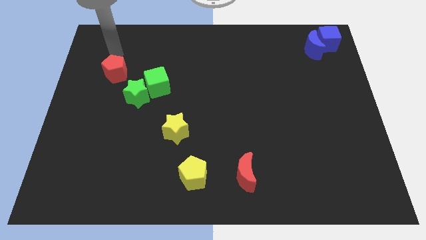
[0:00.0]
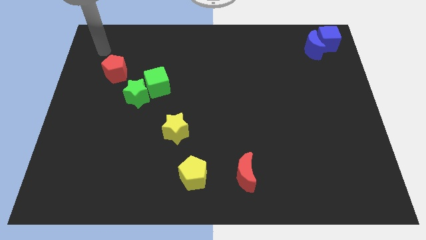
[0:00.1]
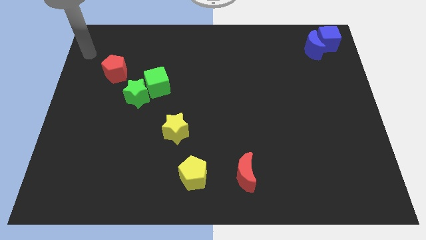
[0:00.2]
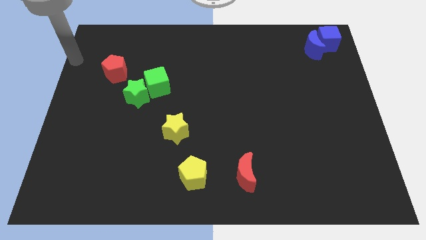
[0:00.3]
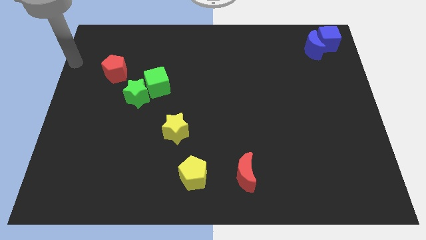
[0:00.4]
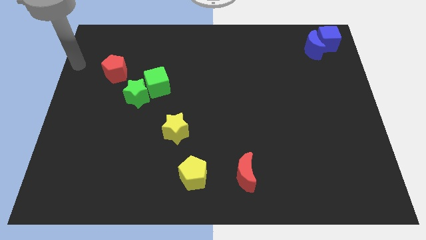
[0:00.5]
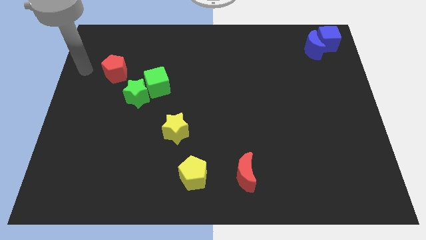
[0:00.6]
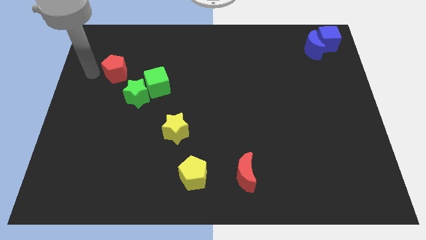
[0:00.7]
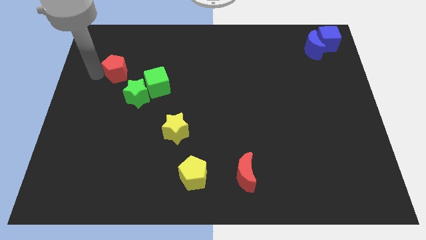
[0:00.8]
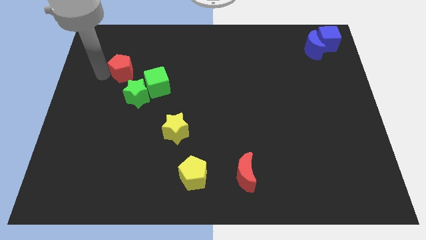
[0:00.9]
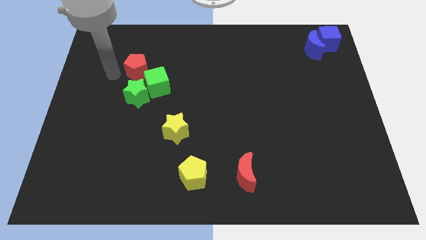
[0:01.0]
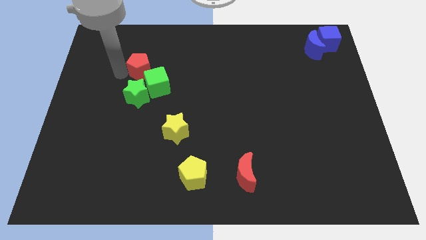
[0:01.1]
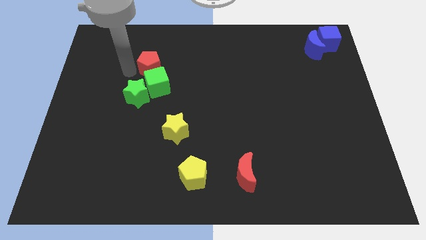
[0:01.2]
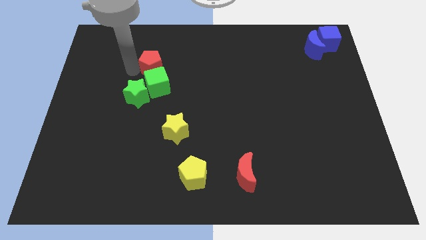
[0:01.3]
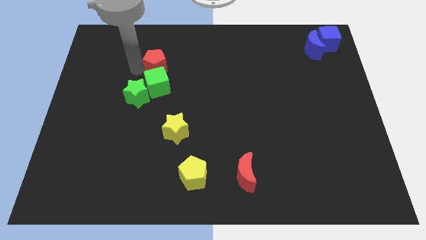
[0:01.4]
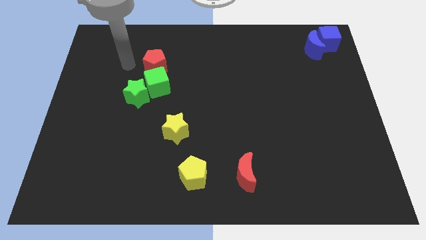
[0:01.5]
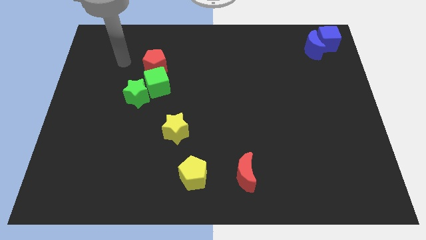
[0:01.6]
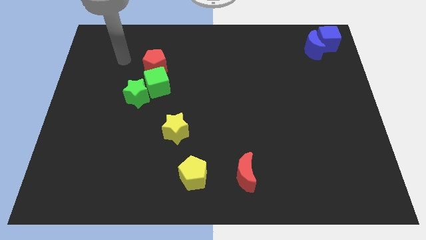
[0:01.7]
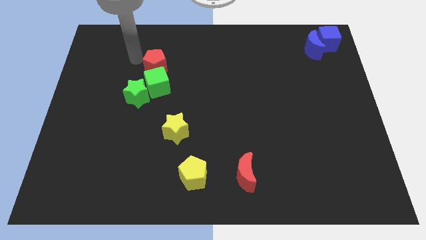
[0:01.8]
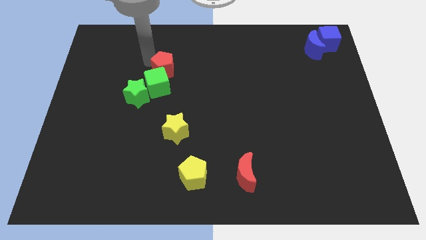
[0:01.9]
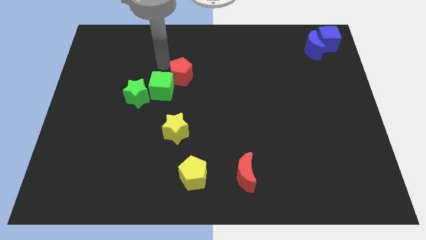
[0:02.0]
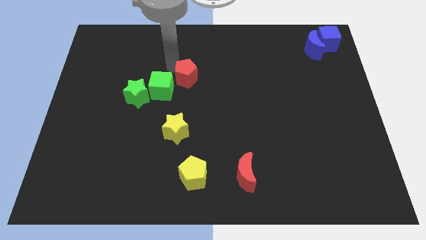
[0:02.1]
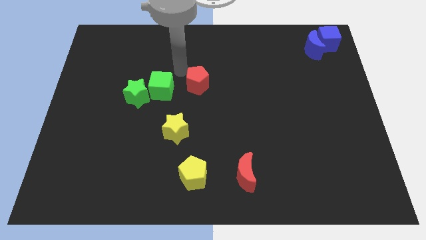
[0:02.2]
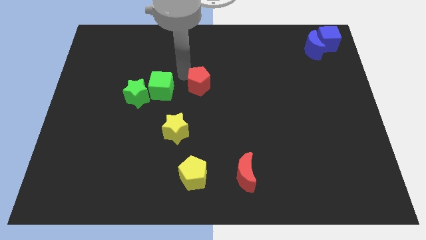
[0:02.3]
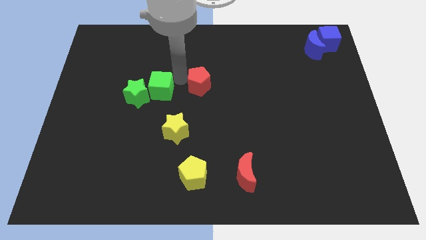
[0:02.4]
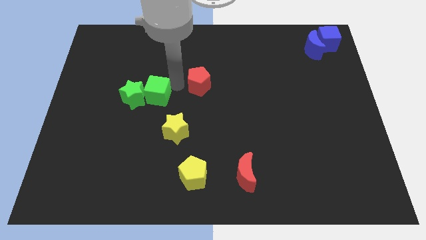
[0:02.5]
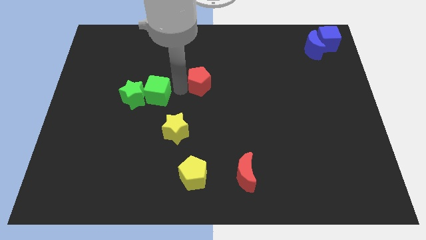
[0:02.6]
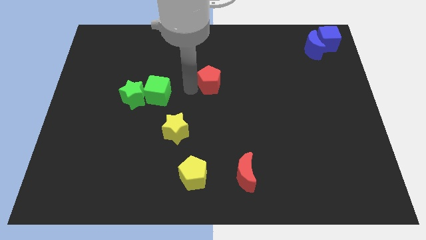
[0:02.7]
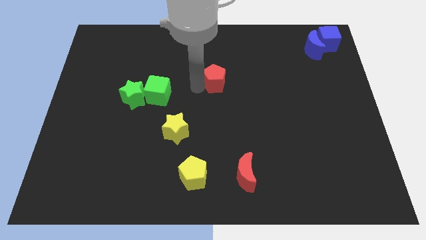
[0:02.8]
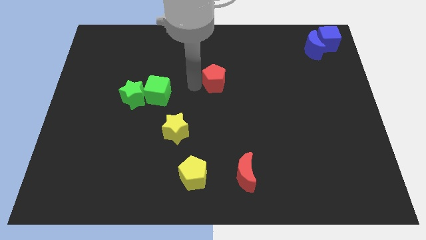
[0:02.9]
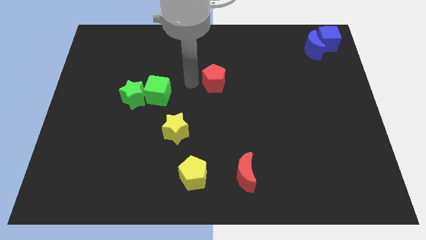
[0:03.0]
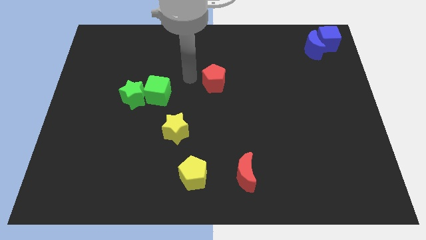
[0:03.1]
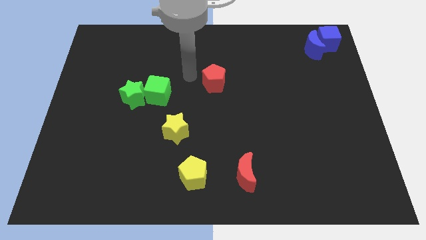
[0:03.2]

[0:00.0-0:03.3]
push the red pentagon diagonally top right to yellow star

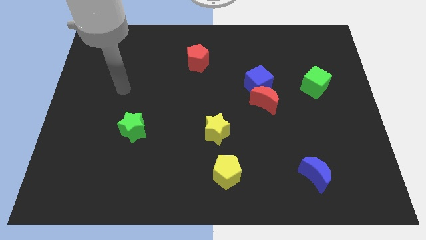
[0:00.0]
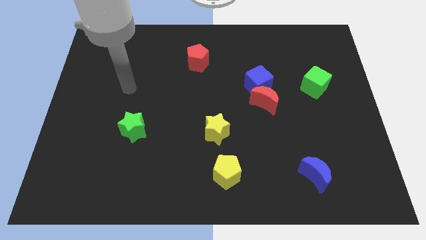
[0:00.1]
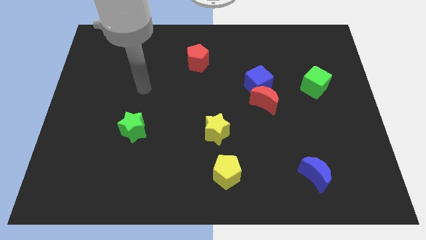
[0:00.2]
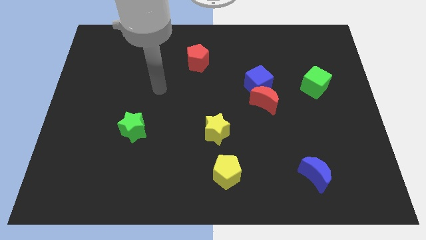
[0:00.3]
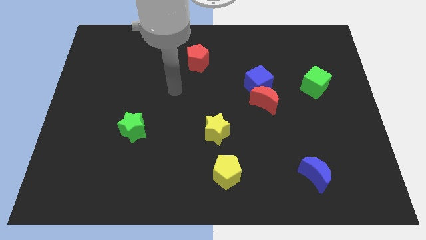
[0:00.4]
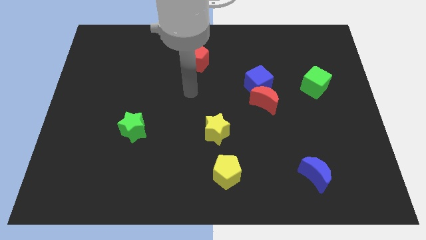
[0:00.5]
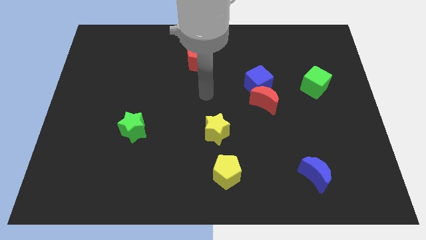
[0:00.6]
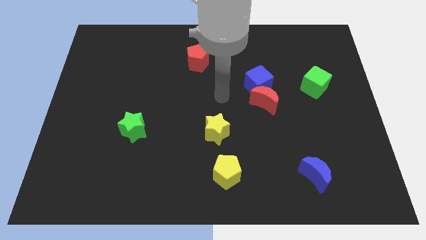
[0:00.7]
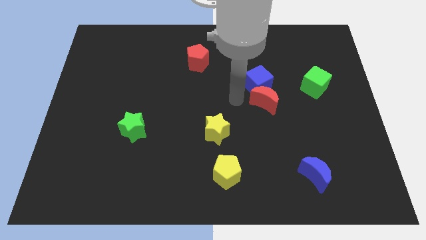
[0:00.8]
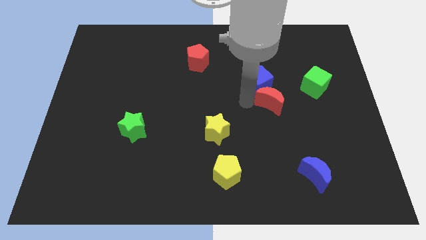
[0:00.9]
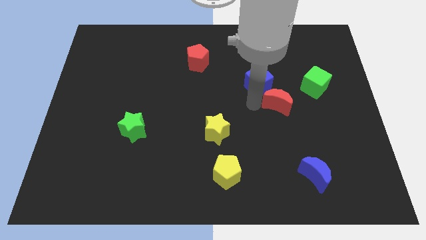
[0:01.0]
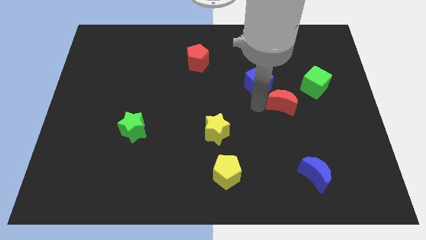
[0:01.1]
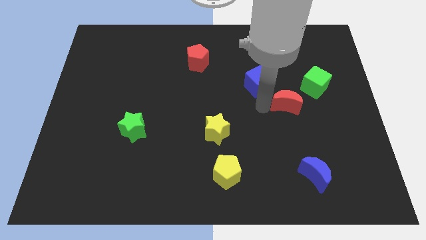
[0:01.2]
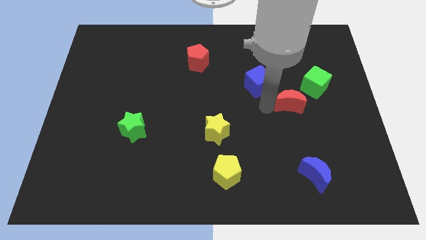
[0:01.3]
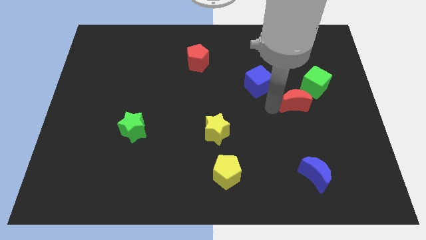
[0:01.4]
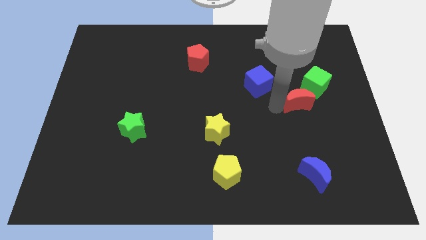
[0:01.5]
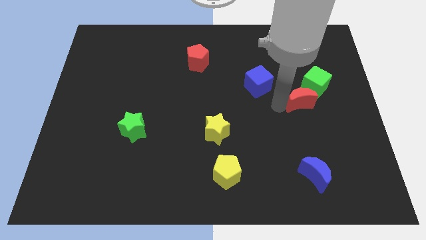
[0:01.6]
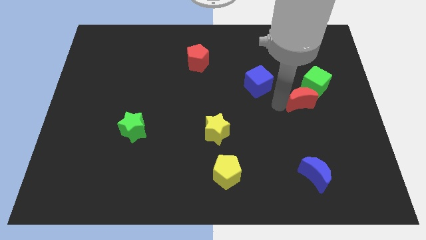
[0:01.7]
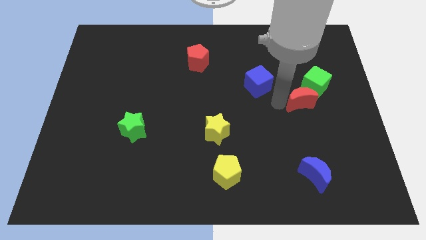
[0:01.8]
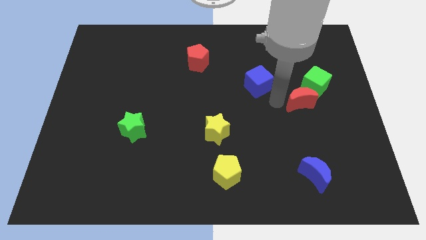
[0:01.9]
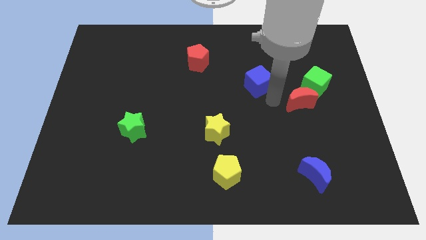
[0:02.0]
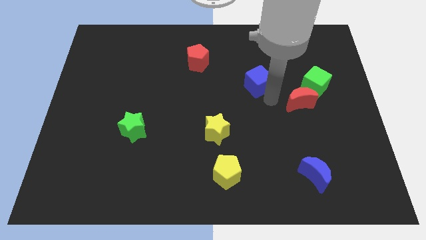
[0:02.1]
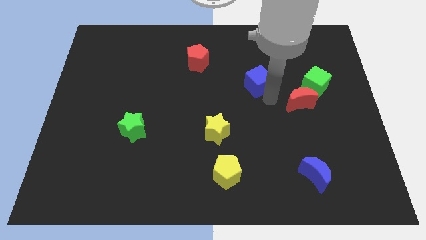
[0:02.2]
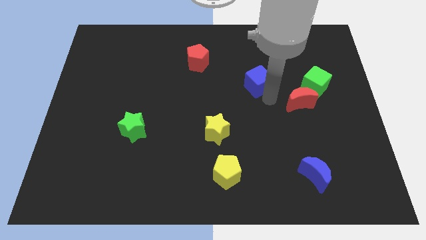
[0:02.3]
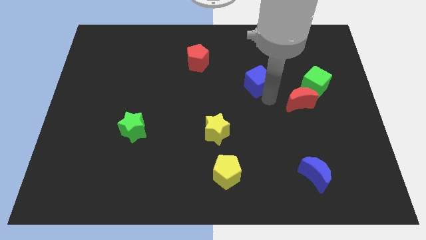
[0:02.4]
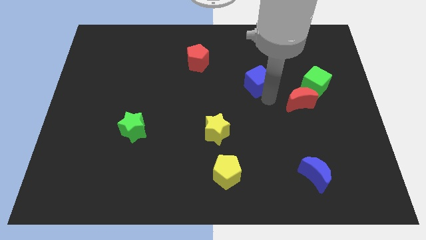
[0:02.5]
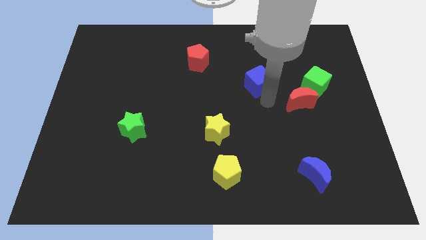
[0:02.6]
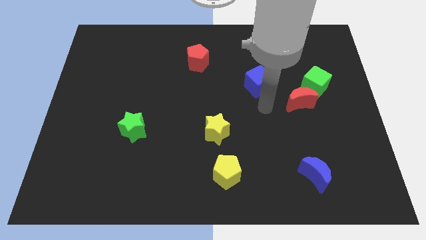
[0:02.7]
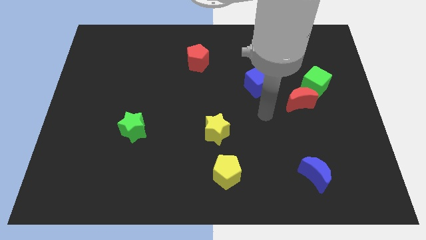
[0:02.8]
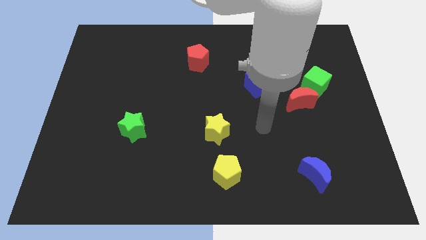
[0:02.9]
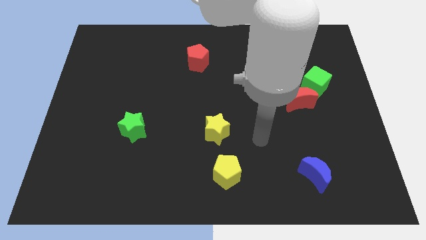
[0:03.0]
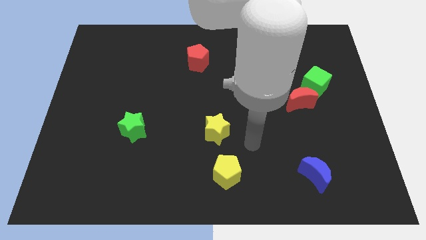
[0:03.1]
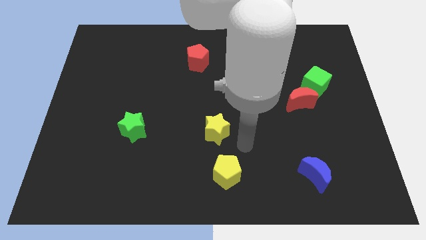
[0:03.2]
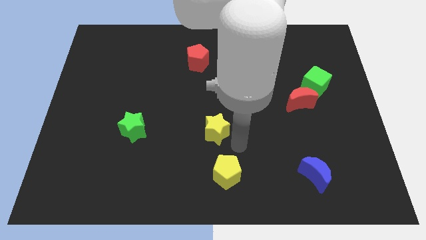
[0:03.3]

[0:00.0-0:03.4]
move the red moon to the bottom side of the green cube

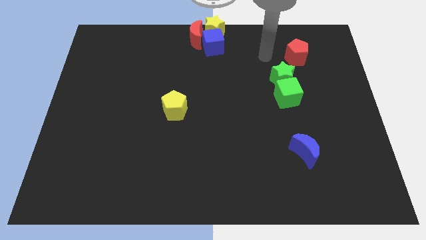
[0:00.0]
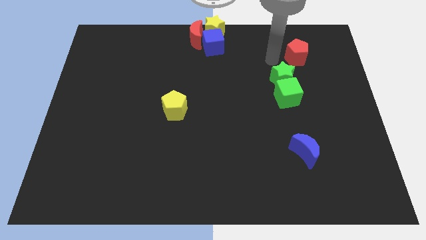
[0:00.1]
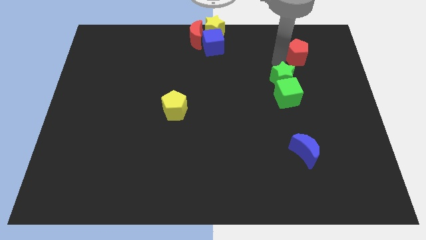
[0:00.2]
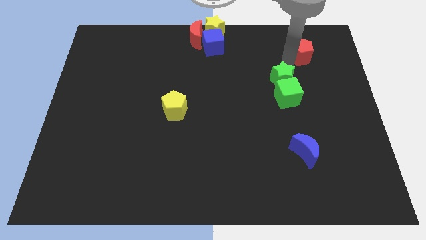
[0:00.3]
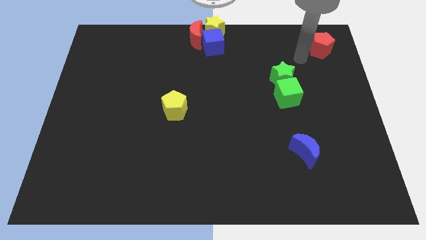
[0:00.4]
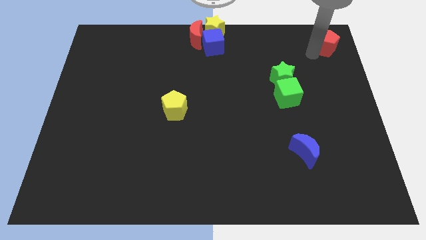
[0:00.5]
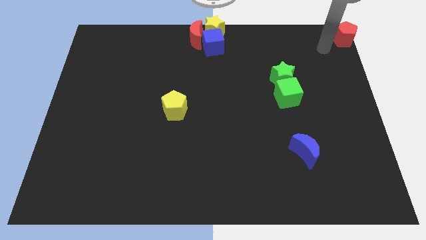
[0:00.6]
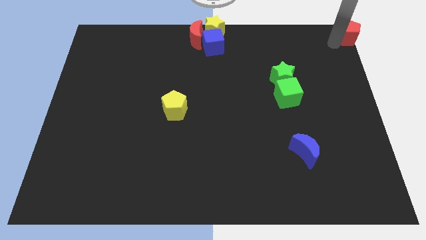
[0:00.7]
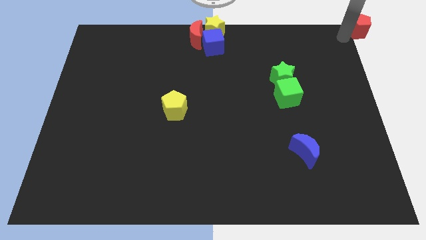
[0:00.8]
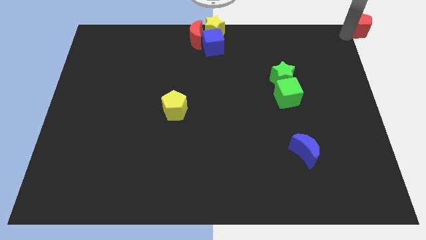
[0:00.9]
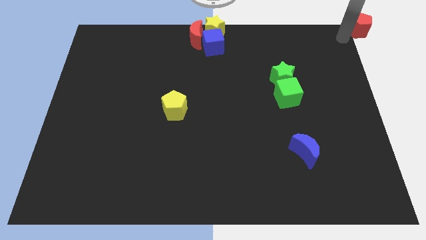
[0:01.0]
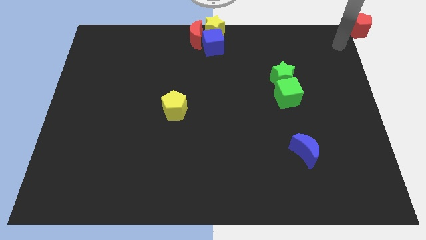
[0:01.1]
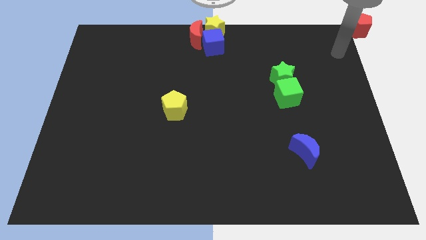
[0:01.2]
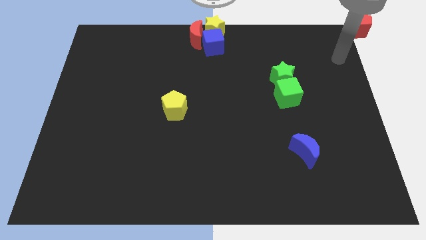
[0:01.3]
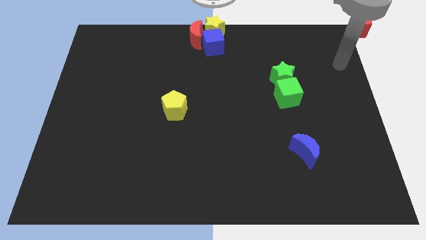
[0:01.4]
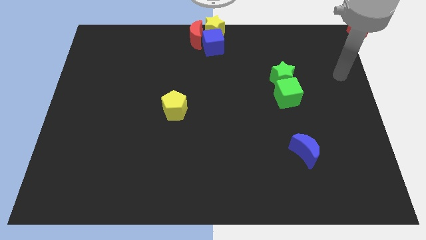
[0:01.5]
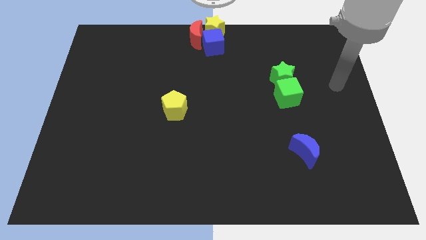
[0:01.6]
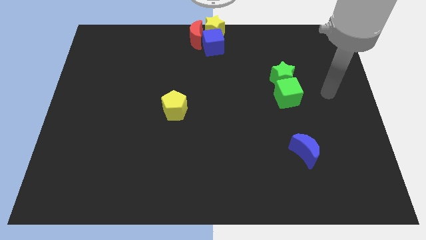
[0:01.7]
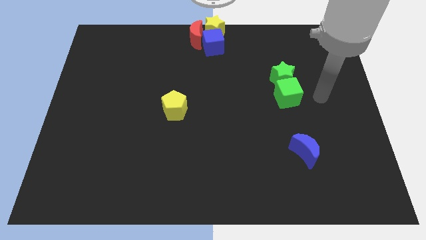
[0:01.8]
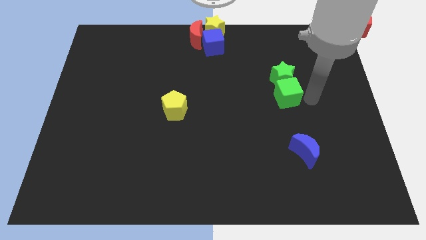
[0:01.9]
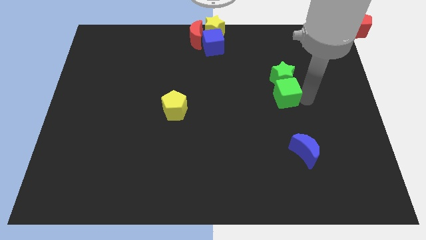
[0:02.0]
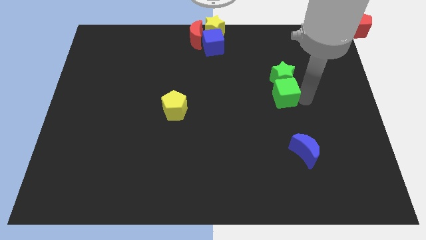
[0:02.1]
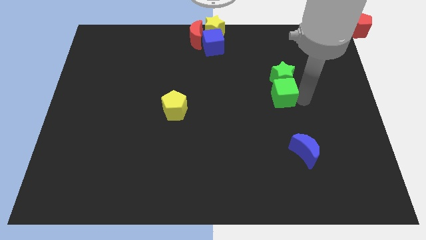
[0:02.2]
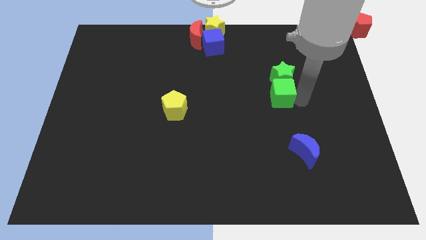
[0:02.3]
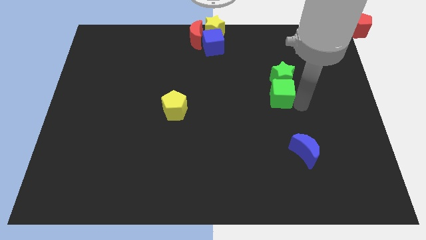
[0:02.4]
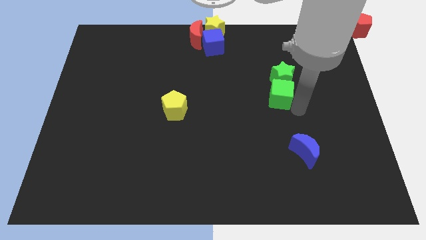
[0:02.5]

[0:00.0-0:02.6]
move red pentagon to the top right corner of the board
